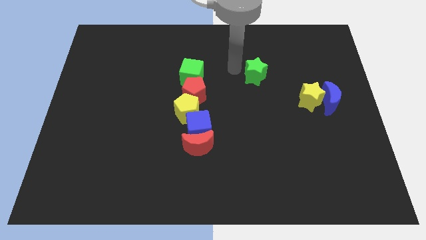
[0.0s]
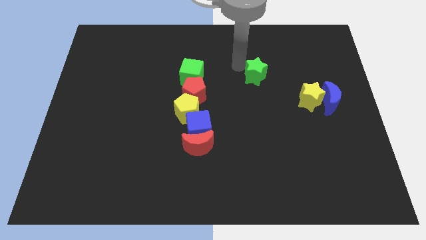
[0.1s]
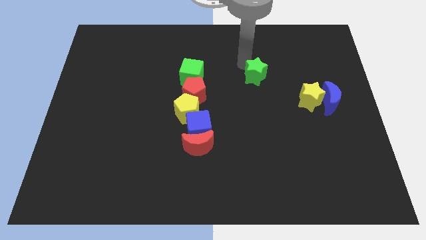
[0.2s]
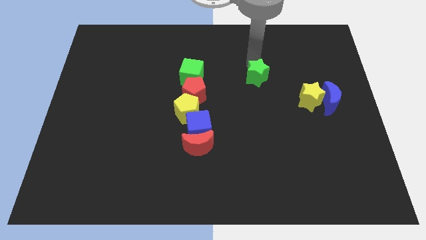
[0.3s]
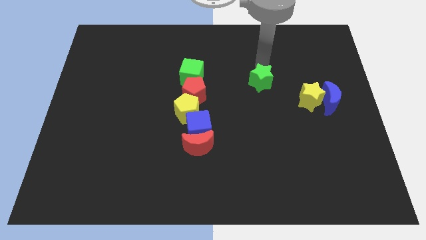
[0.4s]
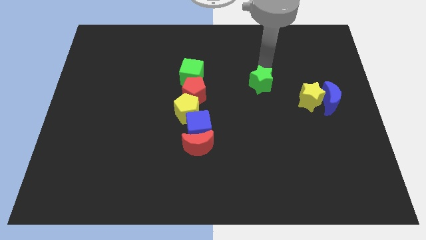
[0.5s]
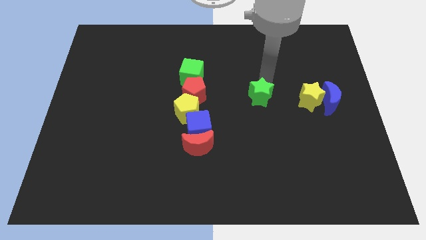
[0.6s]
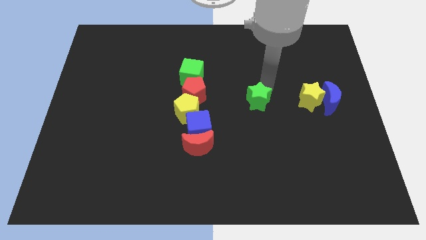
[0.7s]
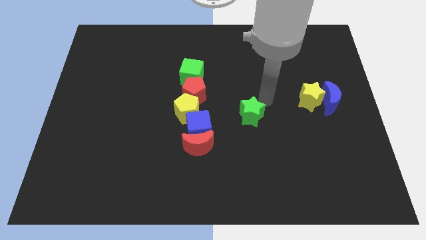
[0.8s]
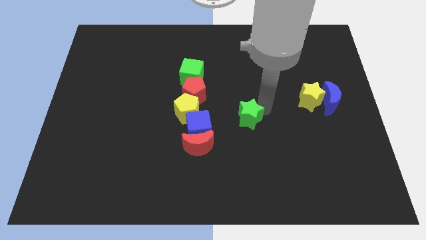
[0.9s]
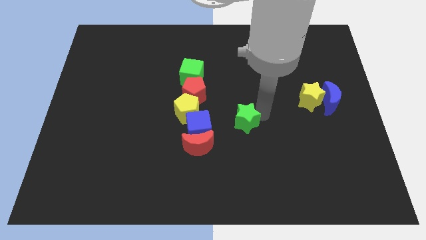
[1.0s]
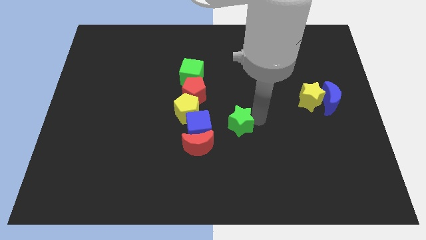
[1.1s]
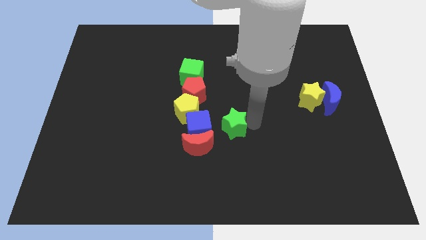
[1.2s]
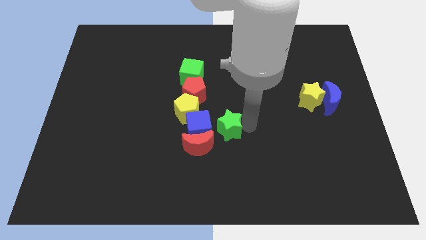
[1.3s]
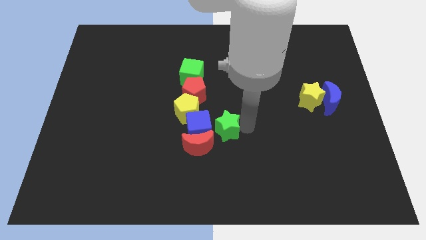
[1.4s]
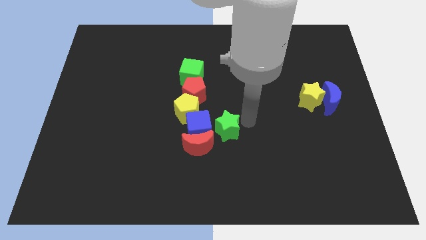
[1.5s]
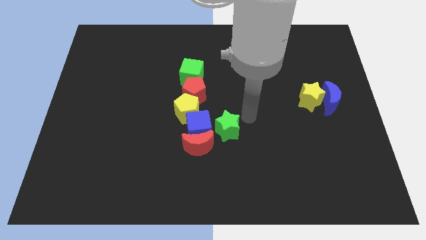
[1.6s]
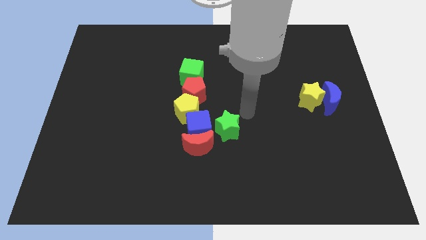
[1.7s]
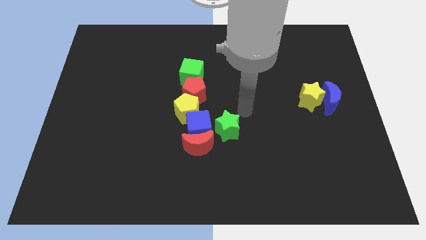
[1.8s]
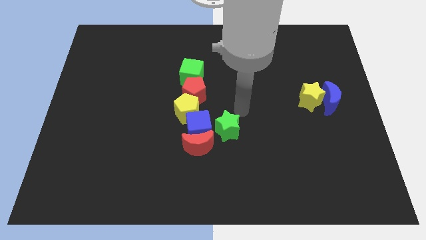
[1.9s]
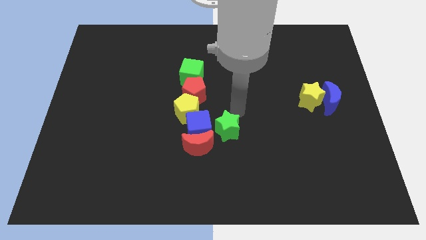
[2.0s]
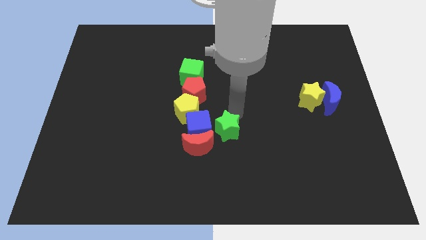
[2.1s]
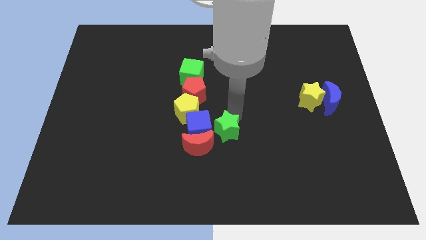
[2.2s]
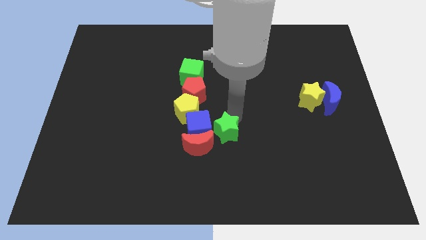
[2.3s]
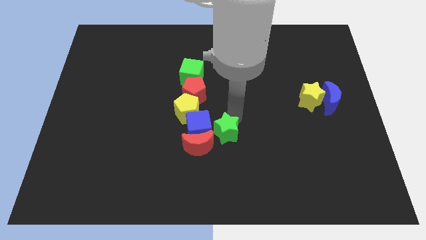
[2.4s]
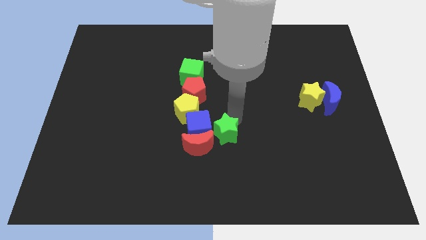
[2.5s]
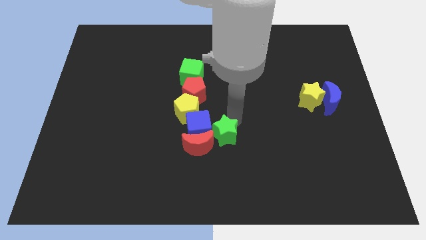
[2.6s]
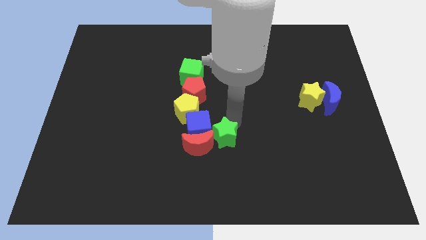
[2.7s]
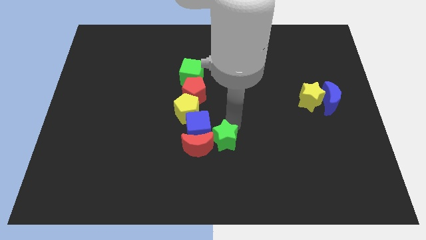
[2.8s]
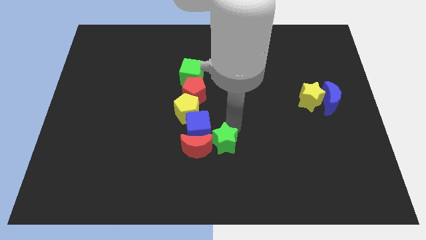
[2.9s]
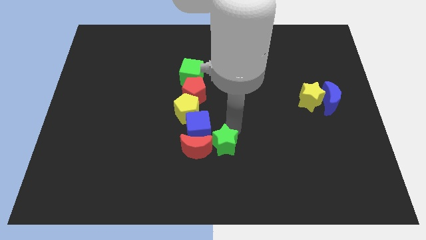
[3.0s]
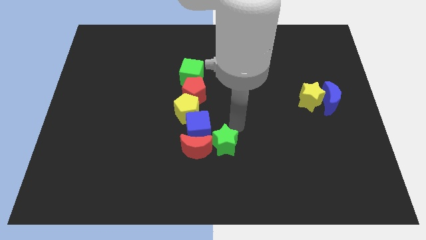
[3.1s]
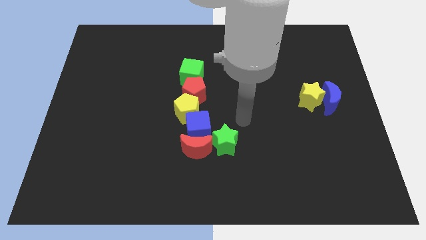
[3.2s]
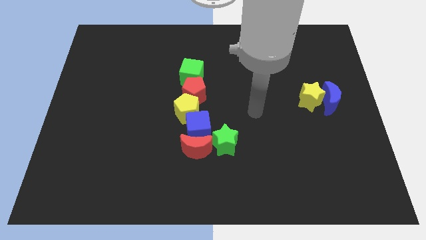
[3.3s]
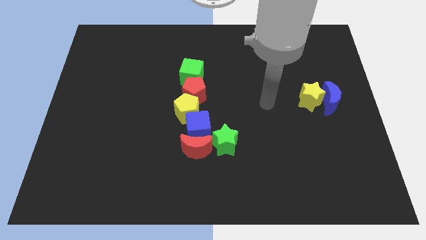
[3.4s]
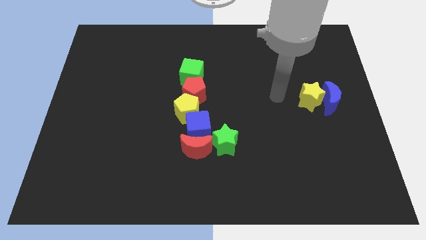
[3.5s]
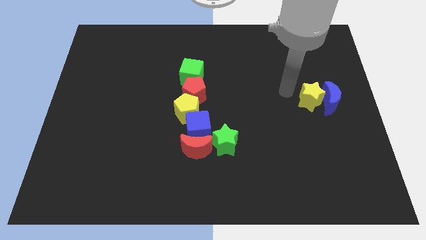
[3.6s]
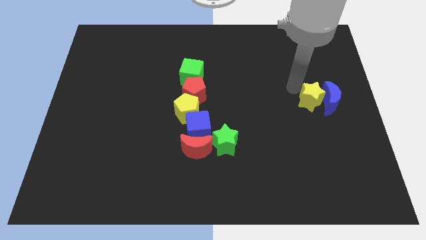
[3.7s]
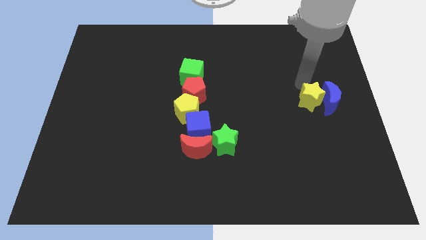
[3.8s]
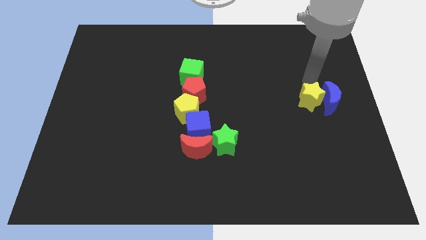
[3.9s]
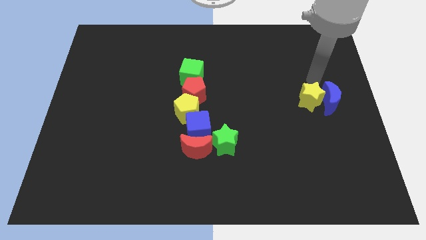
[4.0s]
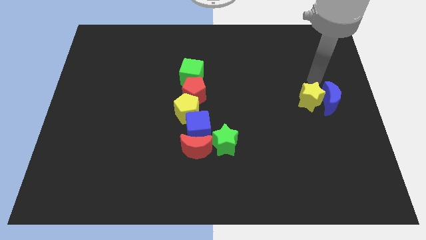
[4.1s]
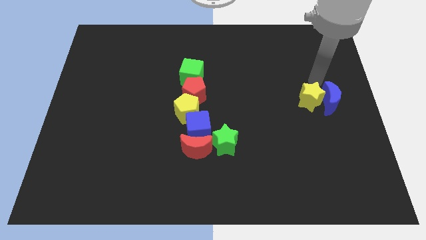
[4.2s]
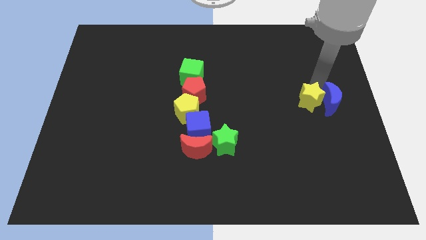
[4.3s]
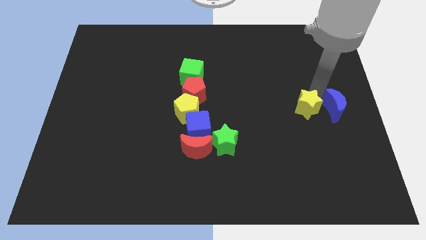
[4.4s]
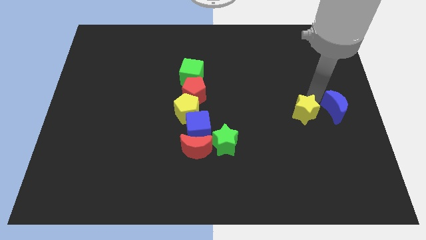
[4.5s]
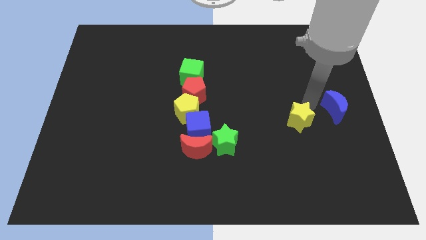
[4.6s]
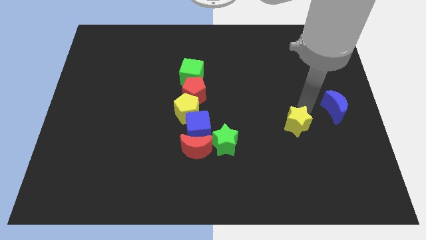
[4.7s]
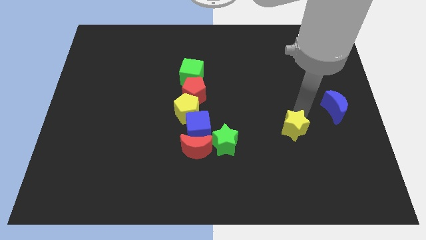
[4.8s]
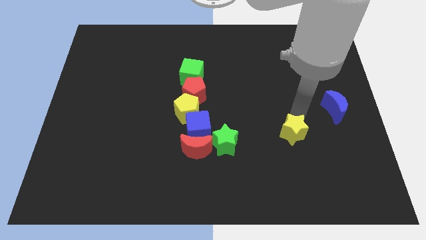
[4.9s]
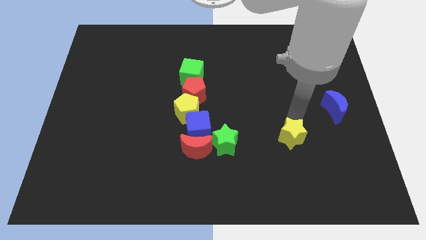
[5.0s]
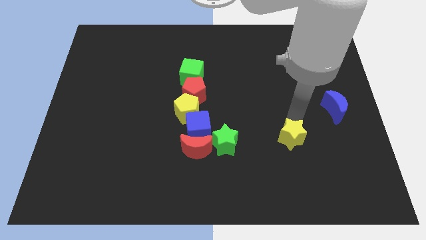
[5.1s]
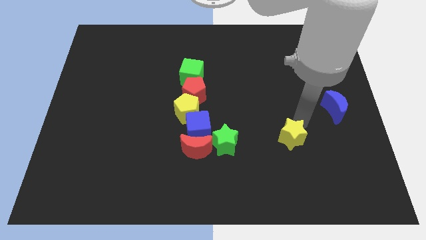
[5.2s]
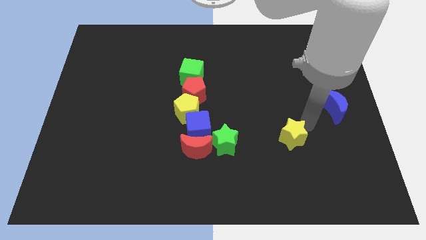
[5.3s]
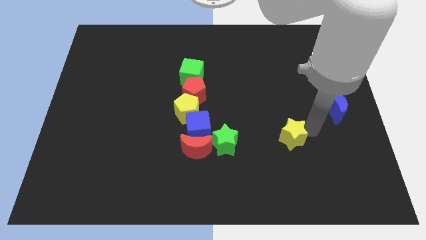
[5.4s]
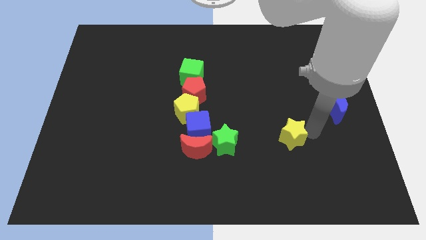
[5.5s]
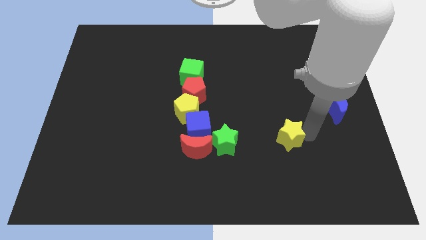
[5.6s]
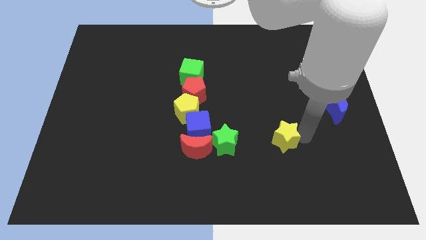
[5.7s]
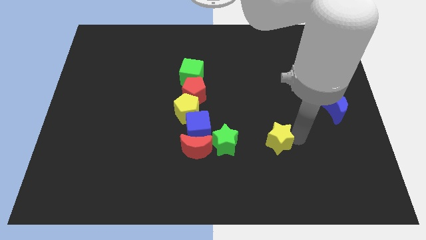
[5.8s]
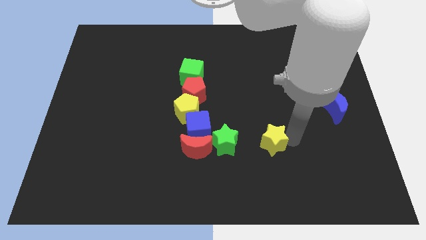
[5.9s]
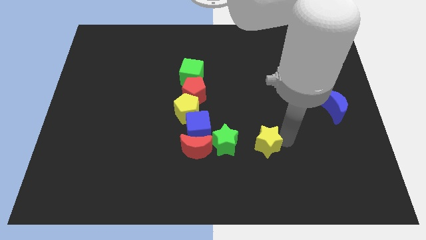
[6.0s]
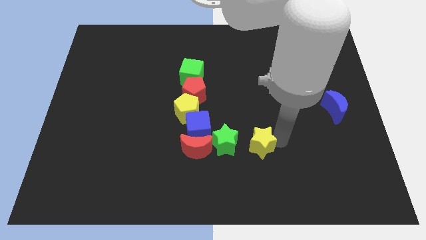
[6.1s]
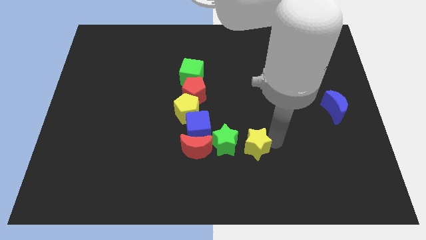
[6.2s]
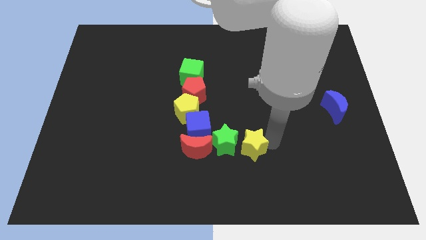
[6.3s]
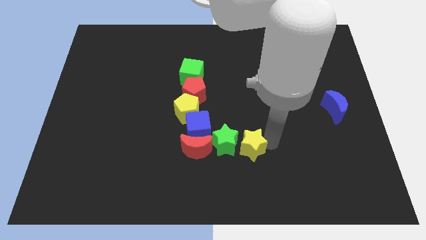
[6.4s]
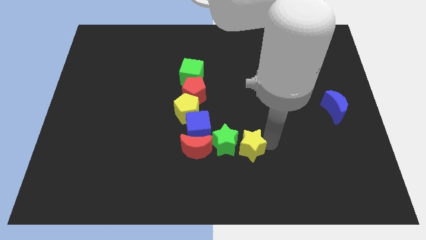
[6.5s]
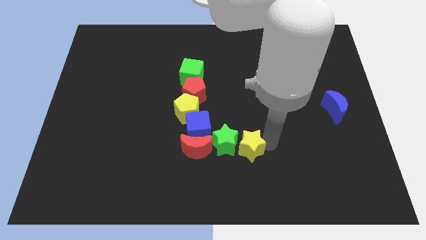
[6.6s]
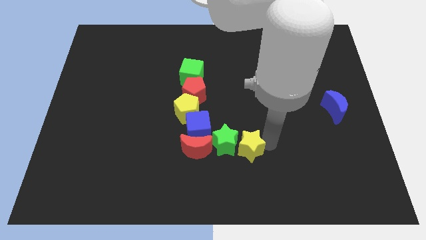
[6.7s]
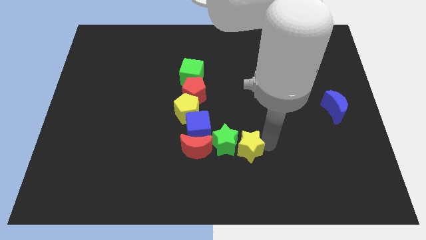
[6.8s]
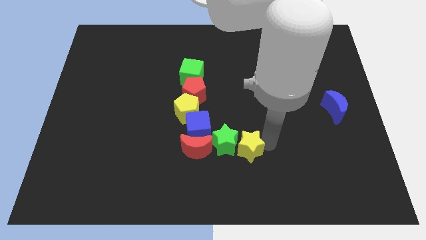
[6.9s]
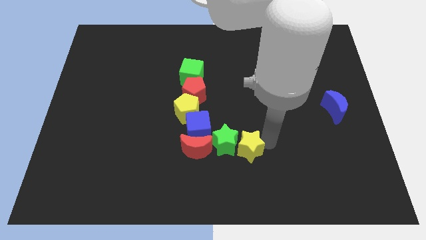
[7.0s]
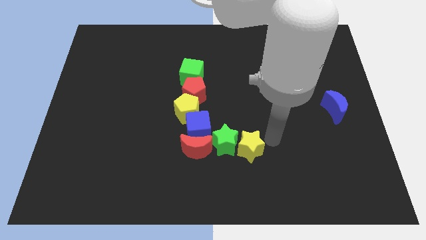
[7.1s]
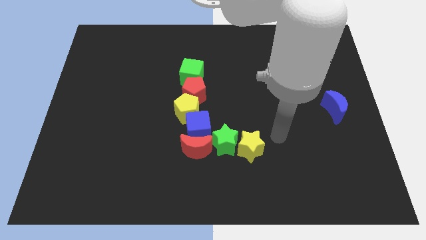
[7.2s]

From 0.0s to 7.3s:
move the green star and yellow star to the right to the red moon

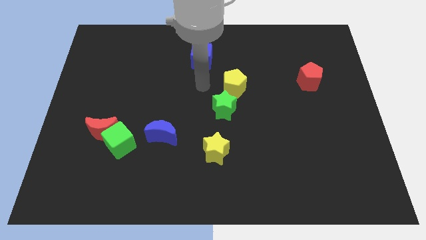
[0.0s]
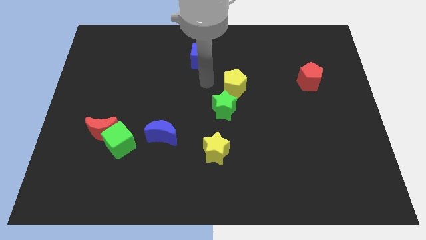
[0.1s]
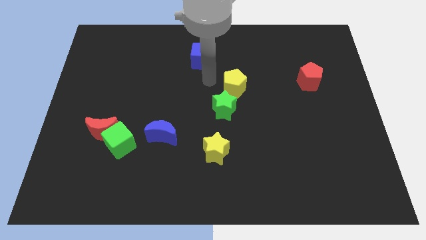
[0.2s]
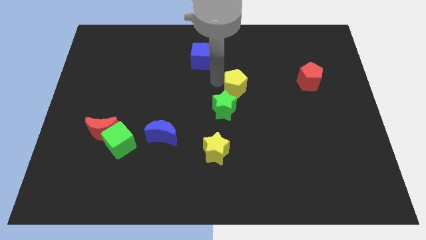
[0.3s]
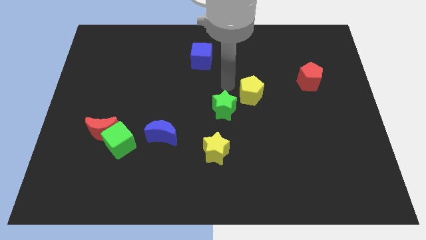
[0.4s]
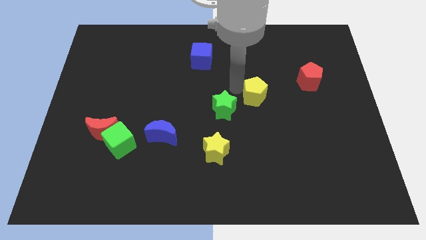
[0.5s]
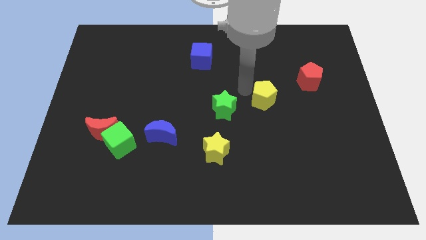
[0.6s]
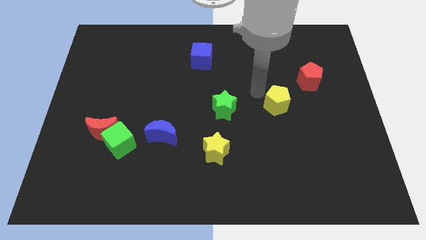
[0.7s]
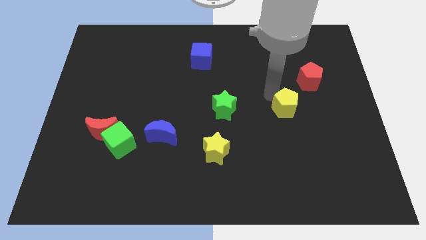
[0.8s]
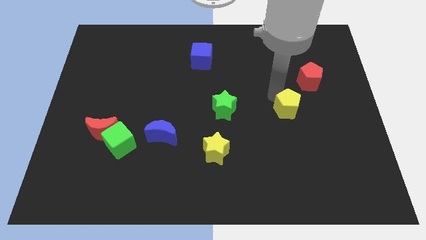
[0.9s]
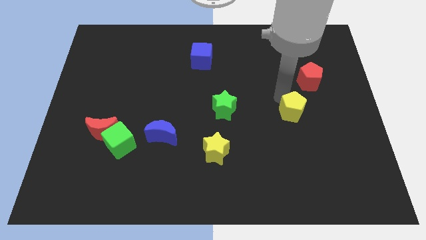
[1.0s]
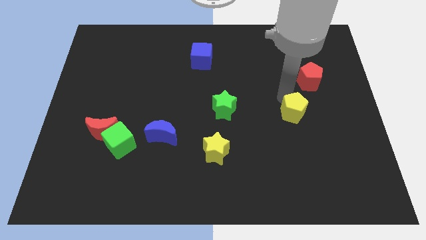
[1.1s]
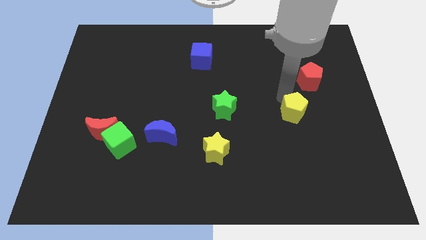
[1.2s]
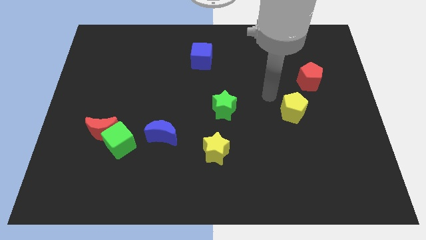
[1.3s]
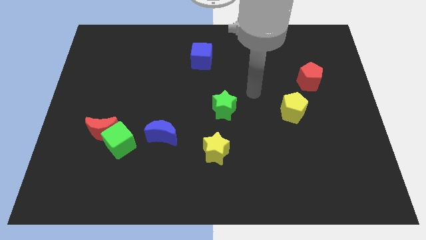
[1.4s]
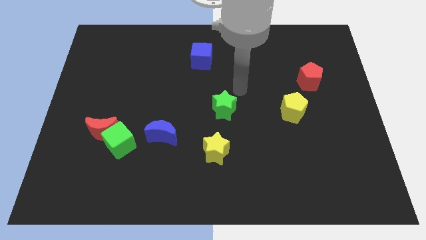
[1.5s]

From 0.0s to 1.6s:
move the yellow pentagon parallel to the green star
